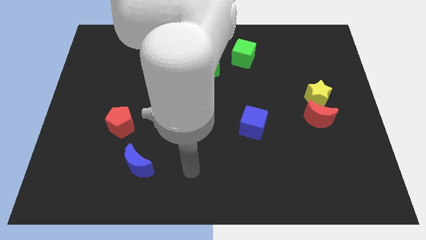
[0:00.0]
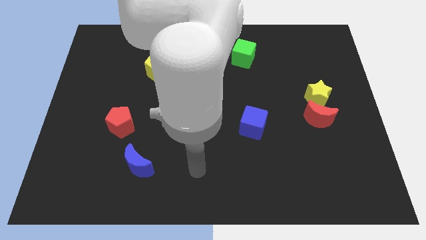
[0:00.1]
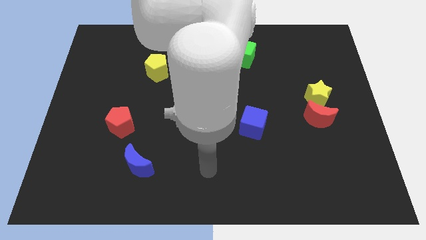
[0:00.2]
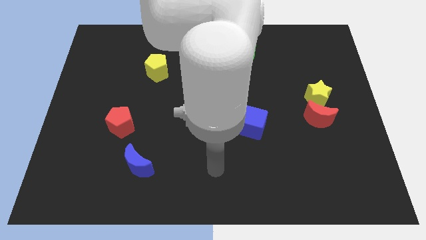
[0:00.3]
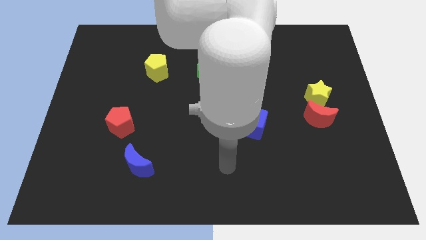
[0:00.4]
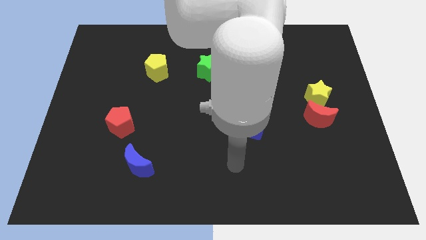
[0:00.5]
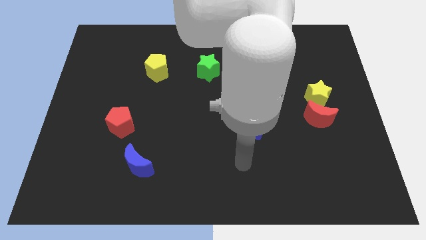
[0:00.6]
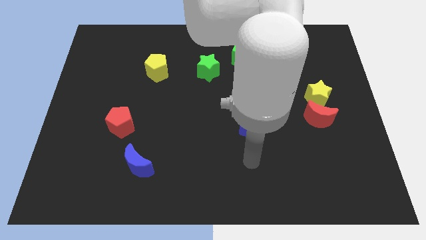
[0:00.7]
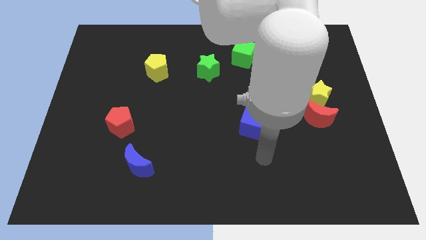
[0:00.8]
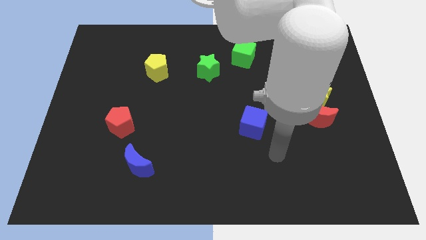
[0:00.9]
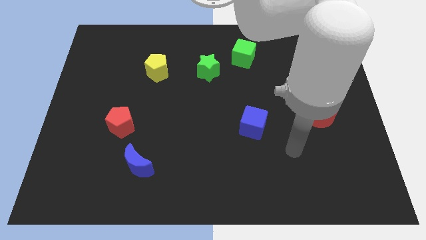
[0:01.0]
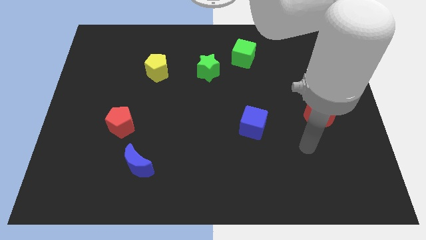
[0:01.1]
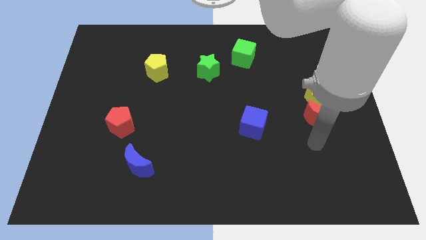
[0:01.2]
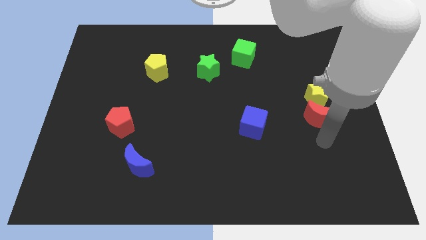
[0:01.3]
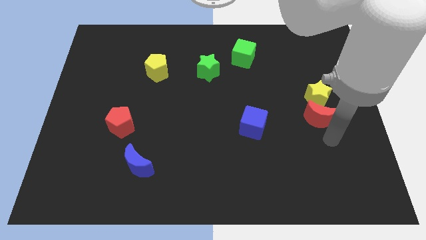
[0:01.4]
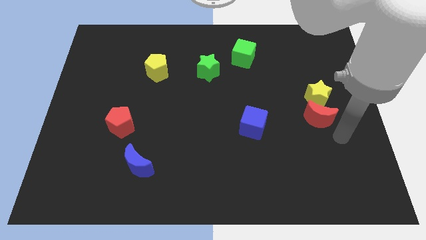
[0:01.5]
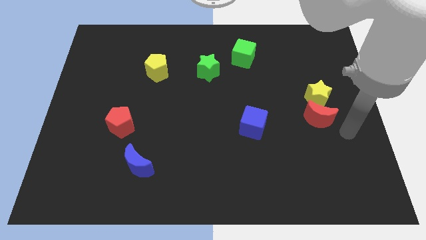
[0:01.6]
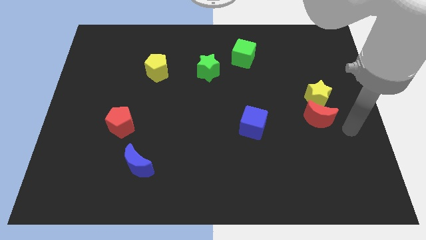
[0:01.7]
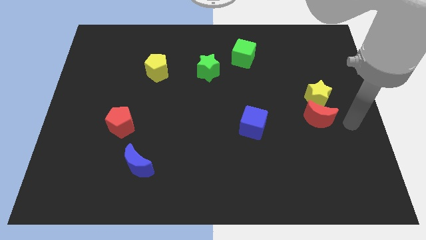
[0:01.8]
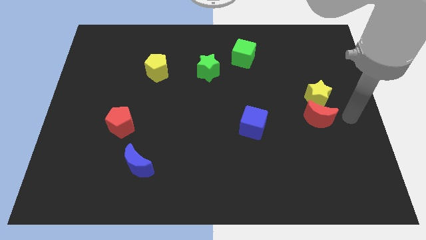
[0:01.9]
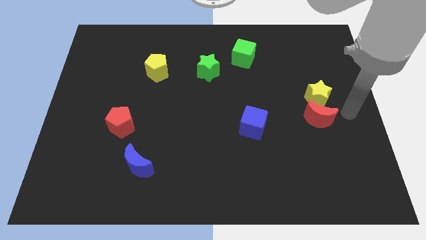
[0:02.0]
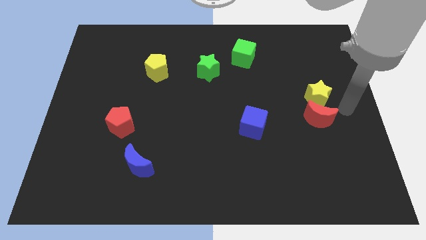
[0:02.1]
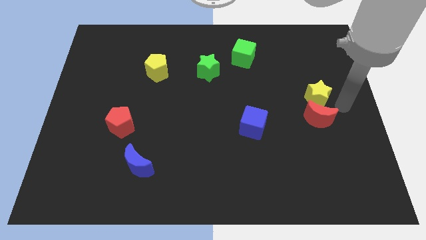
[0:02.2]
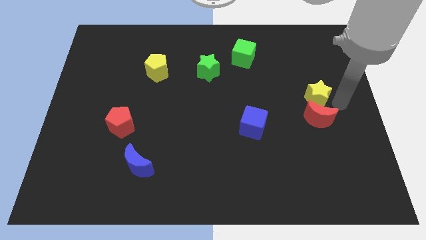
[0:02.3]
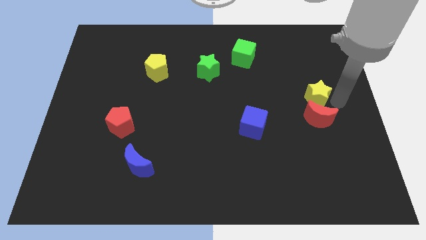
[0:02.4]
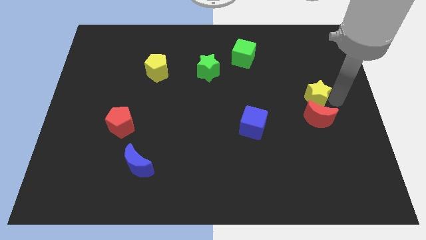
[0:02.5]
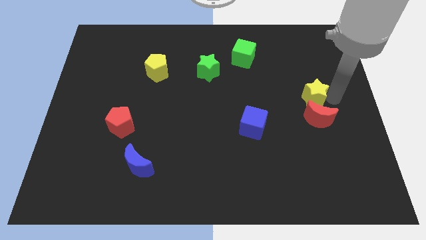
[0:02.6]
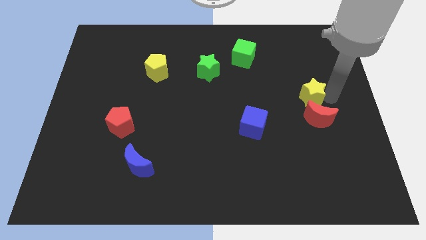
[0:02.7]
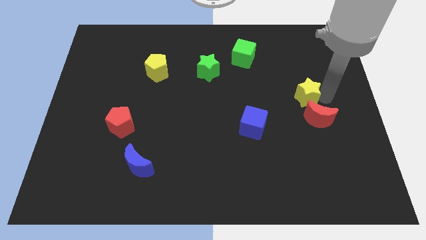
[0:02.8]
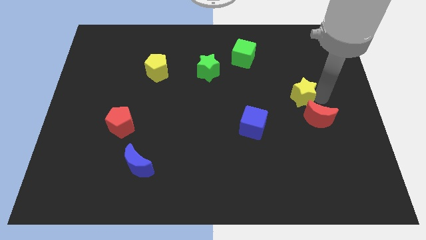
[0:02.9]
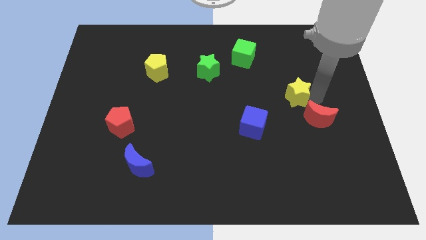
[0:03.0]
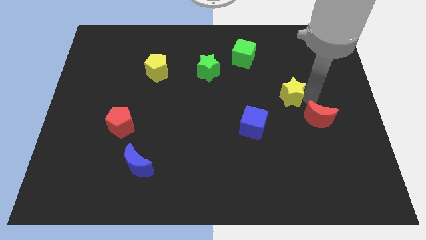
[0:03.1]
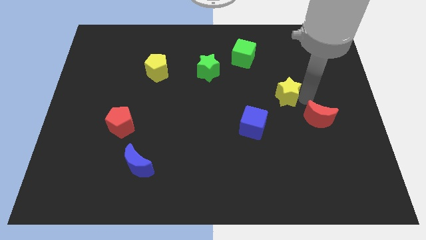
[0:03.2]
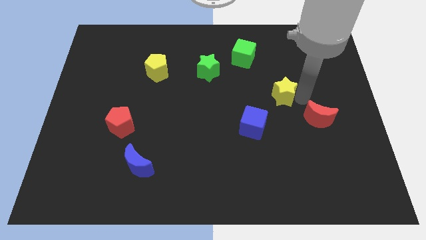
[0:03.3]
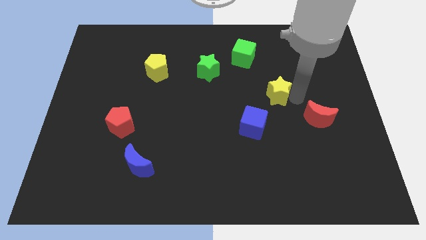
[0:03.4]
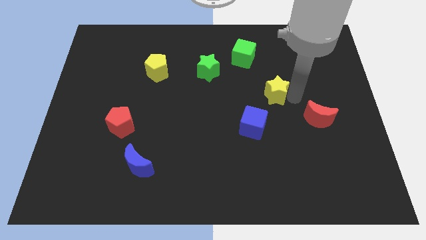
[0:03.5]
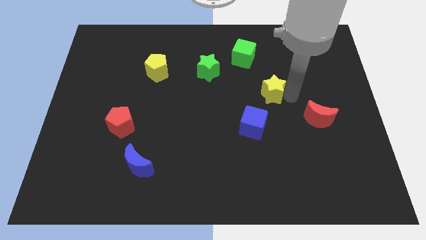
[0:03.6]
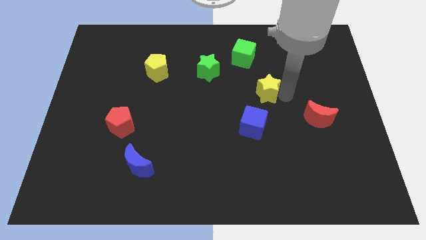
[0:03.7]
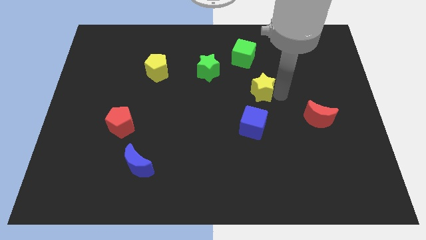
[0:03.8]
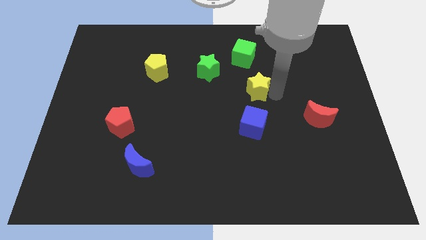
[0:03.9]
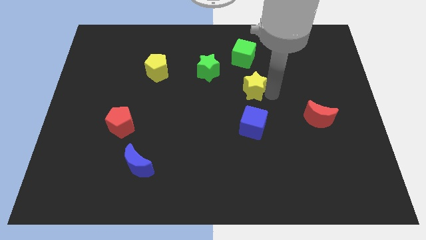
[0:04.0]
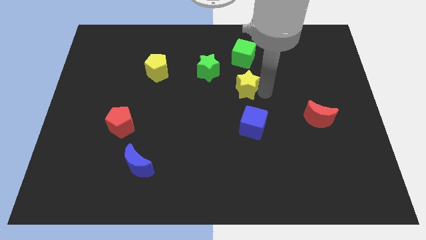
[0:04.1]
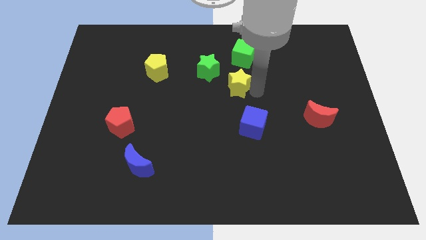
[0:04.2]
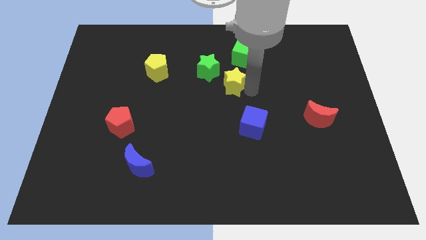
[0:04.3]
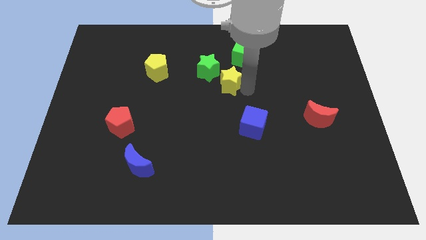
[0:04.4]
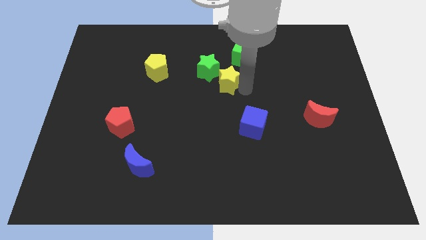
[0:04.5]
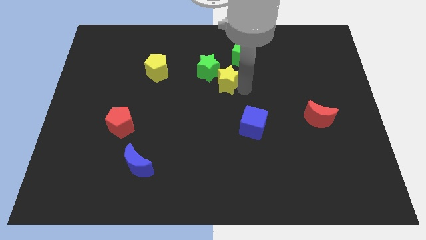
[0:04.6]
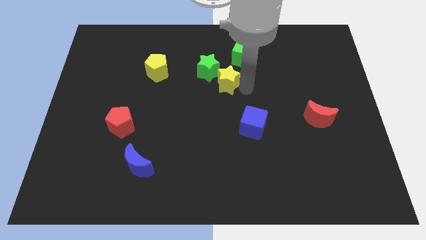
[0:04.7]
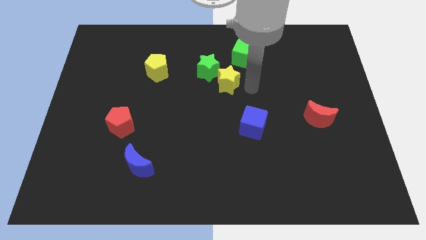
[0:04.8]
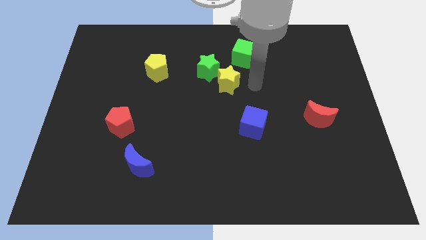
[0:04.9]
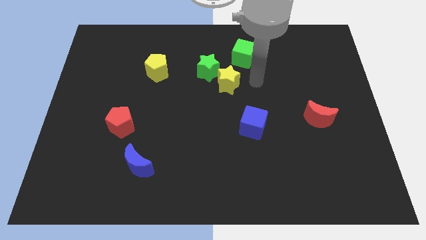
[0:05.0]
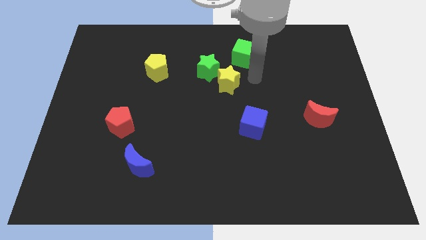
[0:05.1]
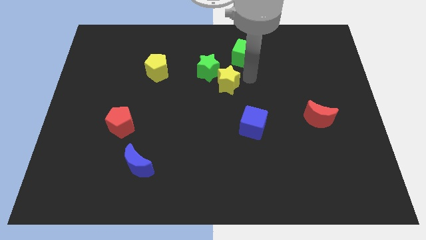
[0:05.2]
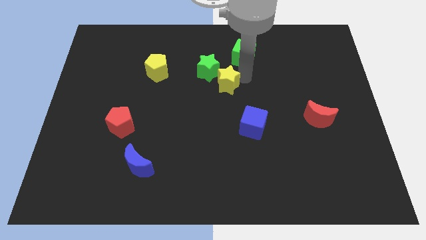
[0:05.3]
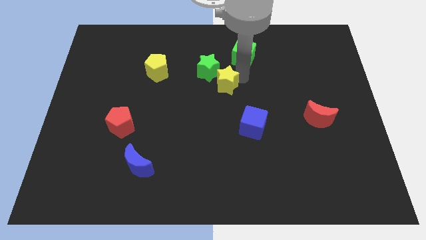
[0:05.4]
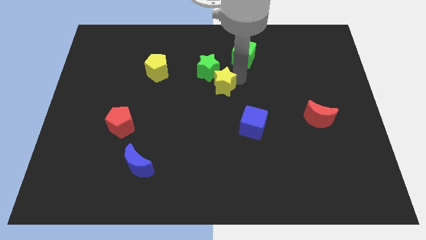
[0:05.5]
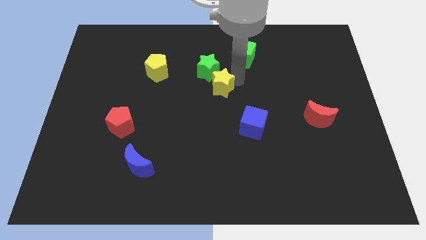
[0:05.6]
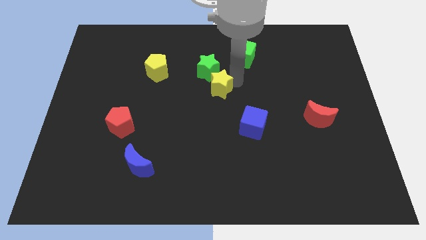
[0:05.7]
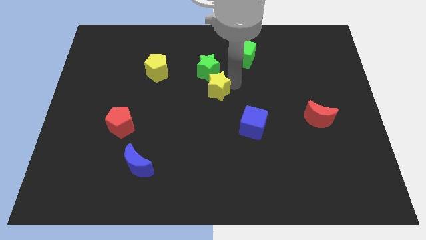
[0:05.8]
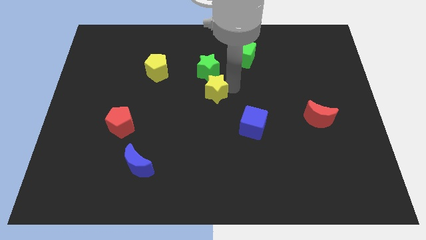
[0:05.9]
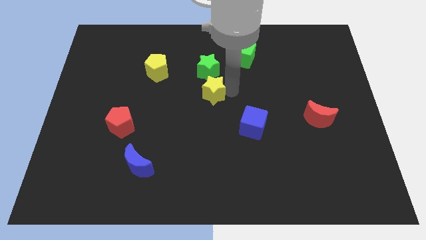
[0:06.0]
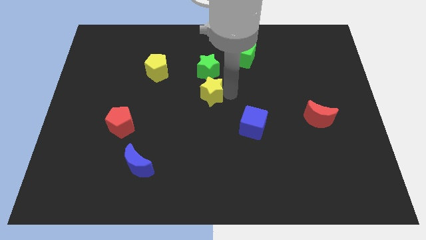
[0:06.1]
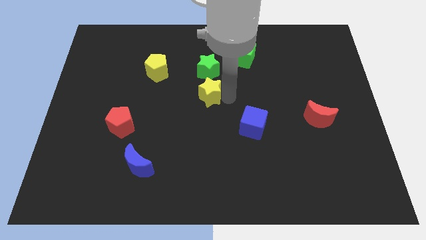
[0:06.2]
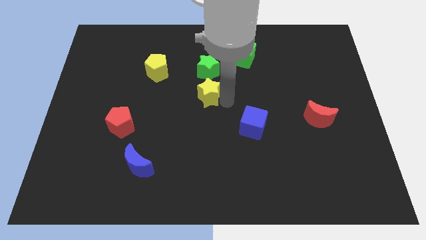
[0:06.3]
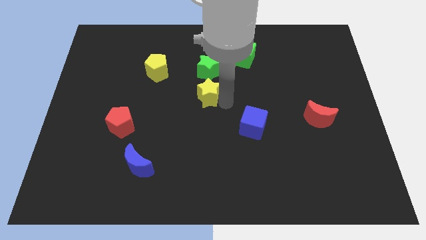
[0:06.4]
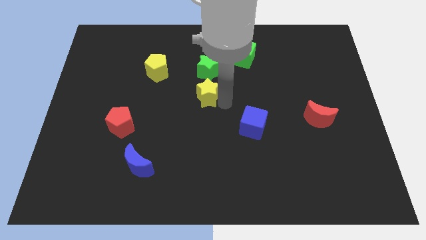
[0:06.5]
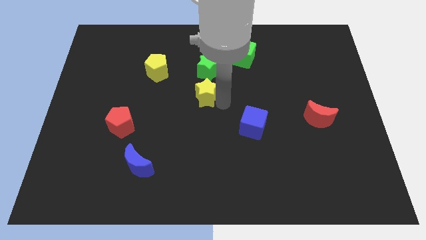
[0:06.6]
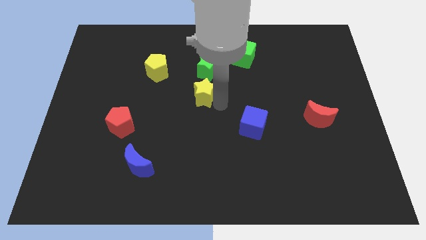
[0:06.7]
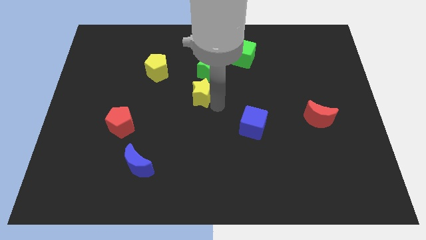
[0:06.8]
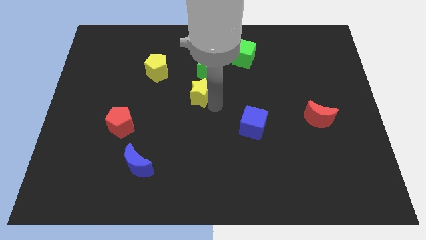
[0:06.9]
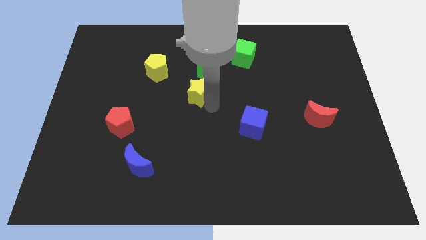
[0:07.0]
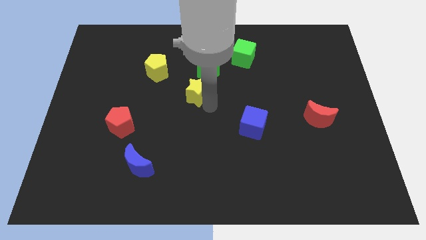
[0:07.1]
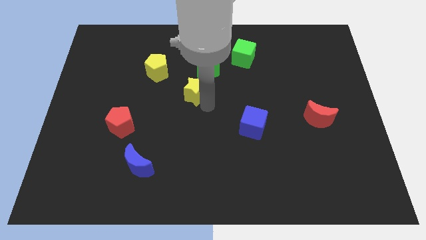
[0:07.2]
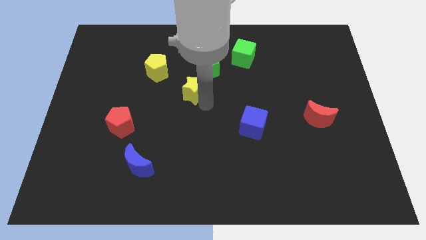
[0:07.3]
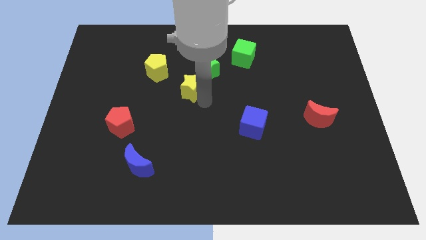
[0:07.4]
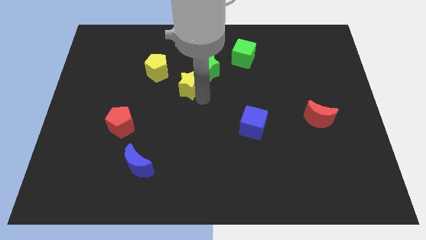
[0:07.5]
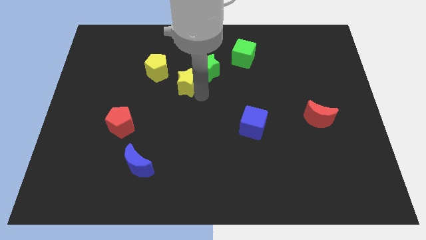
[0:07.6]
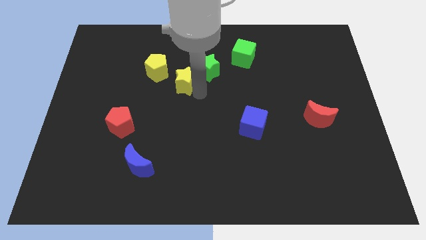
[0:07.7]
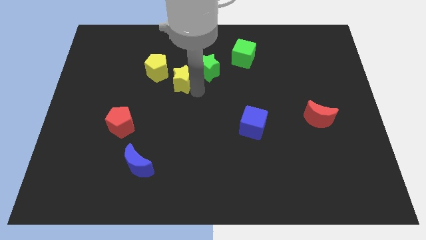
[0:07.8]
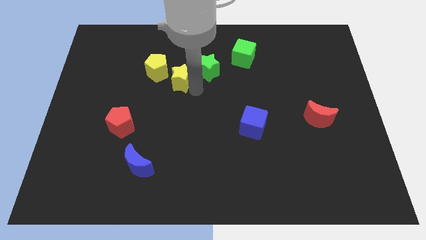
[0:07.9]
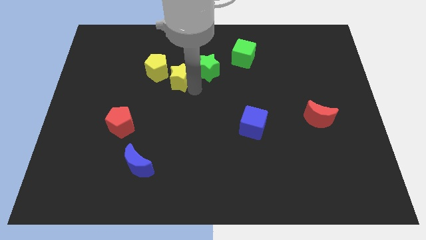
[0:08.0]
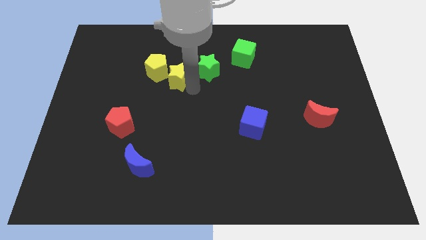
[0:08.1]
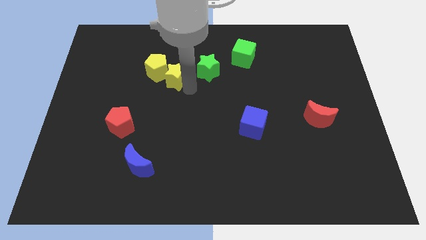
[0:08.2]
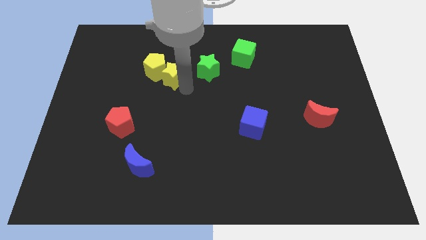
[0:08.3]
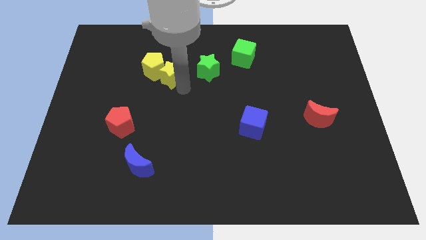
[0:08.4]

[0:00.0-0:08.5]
move the yellow star next to the yellow pentagon
